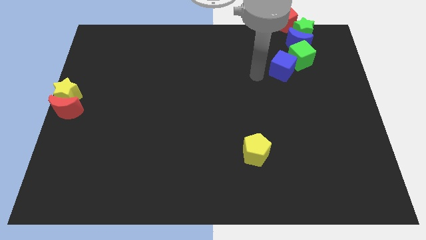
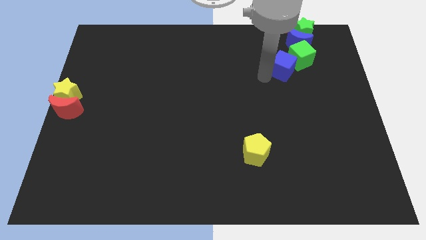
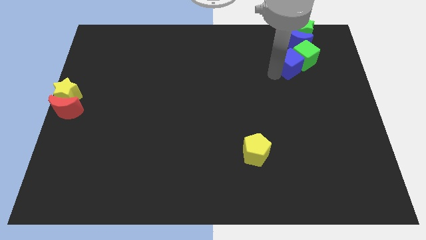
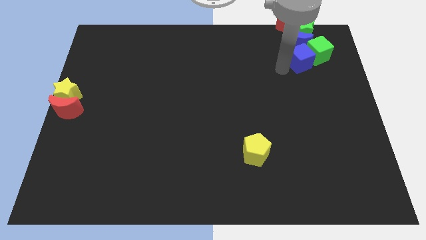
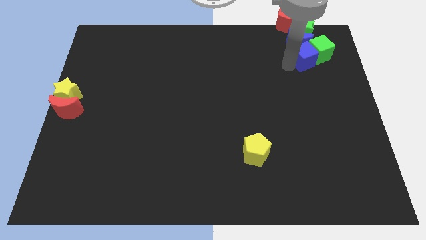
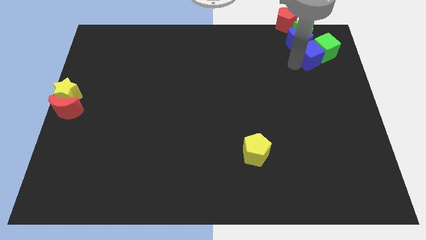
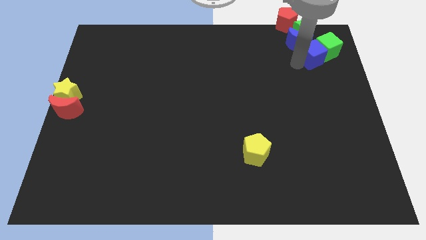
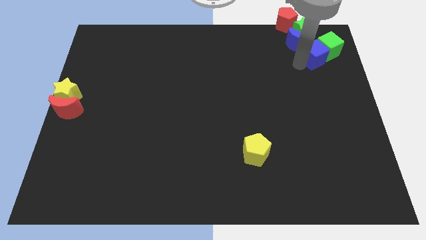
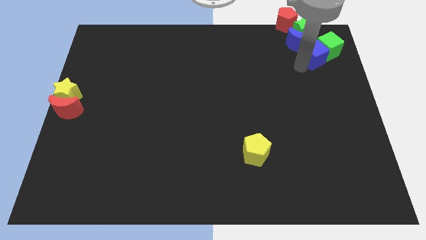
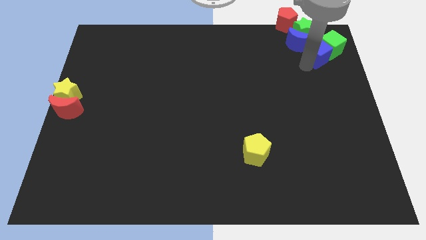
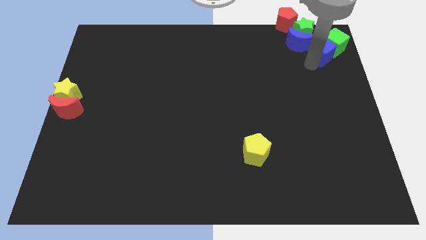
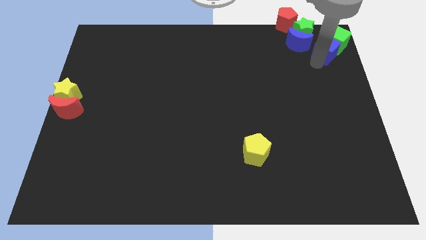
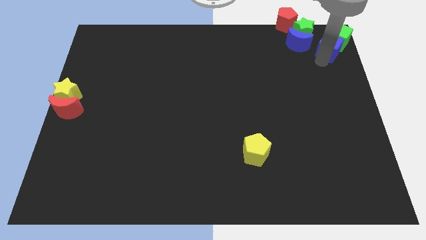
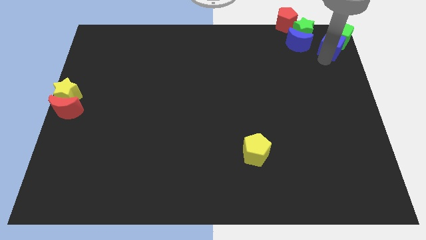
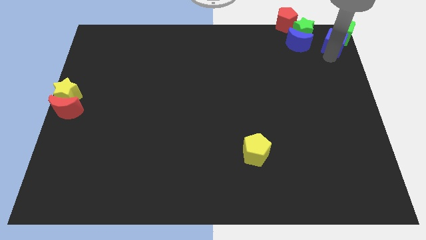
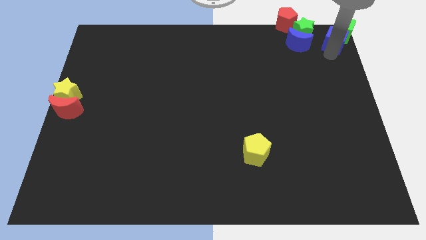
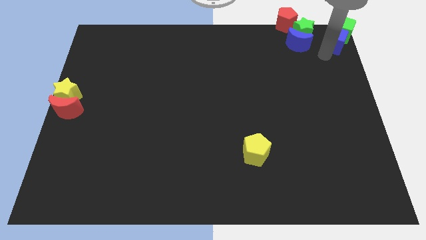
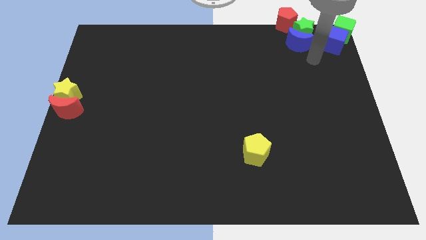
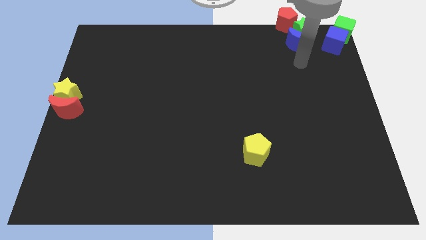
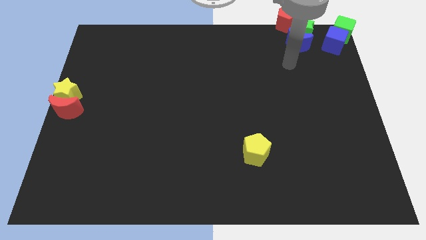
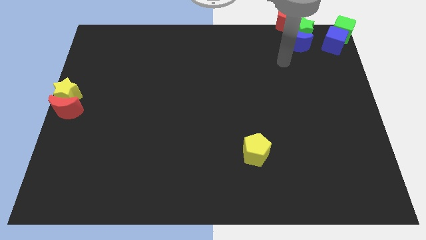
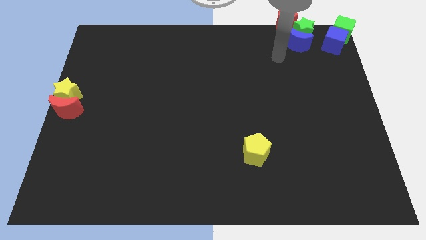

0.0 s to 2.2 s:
push the green cube with the blue cube to the top right of the board

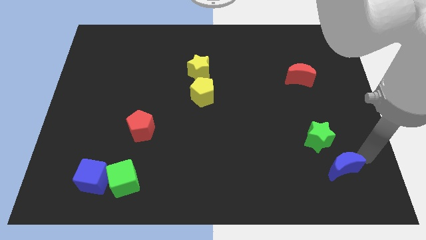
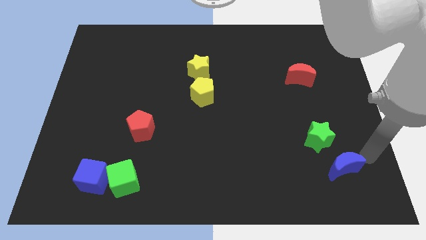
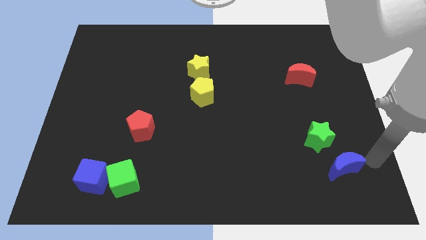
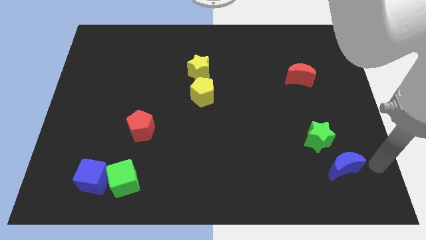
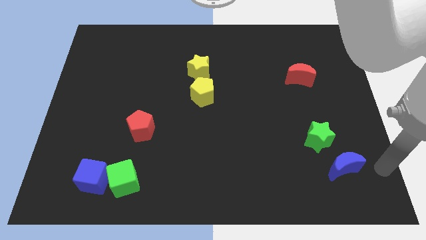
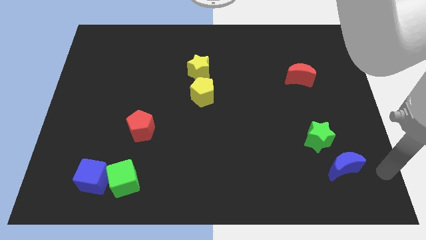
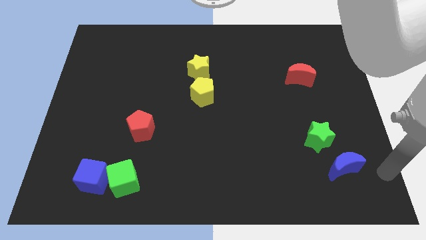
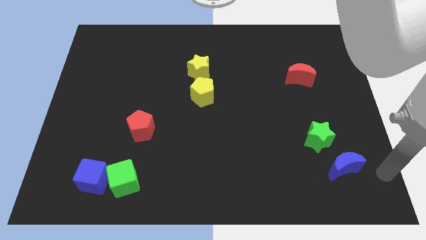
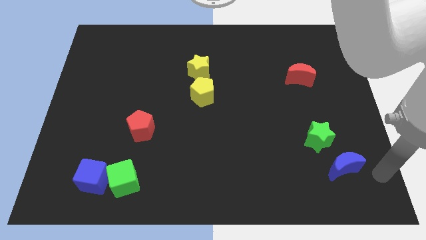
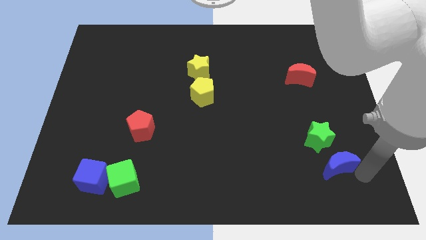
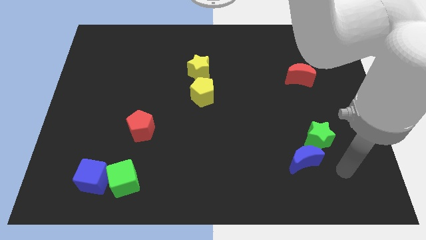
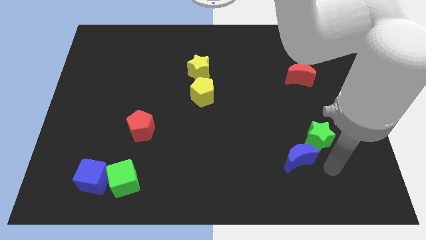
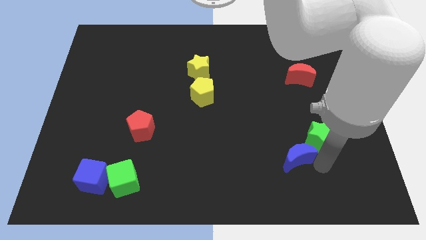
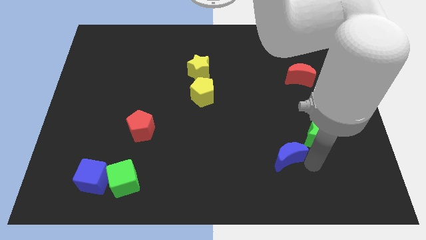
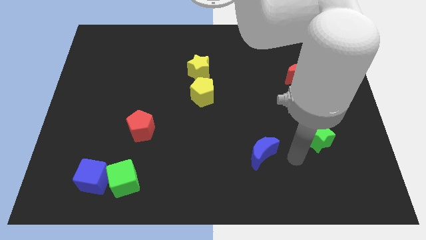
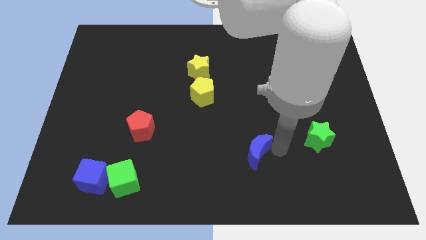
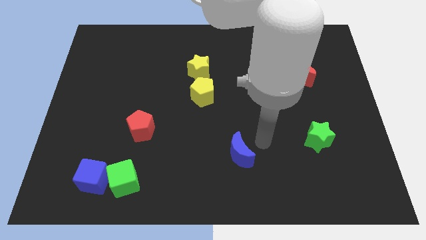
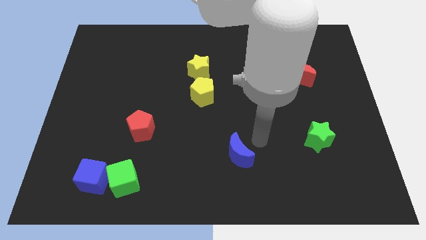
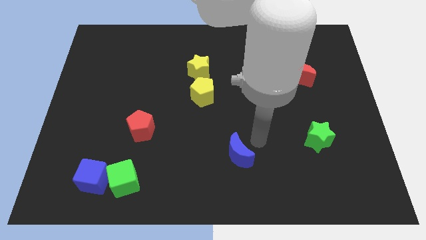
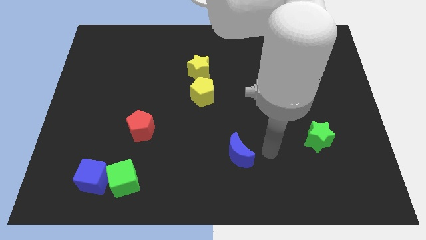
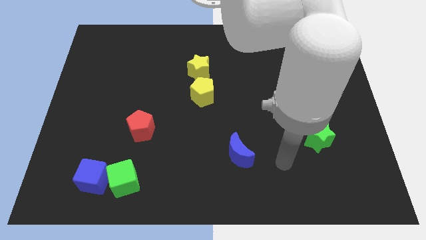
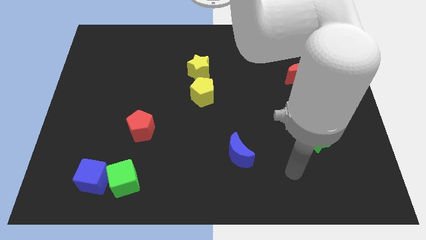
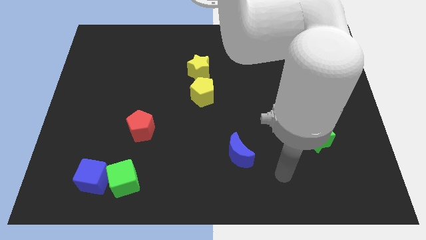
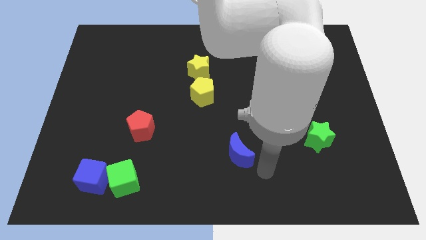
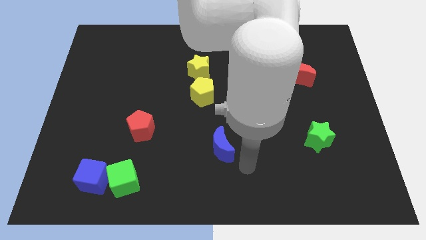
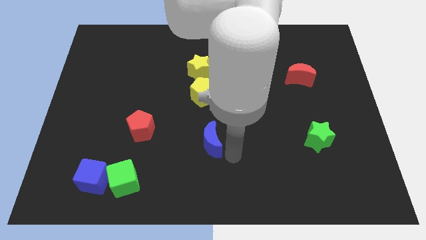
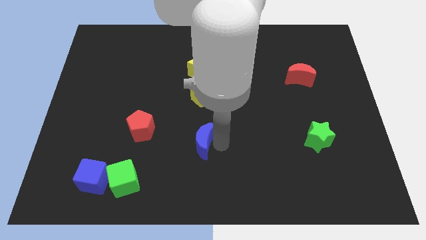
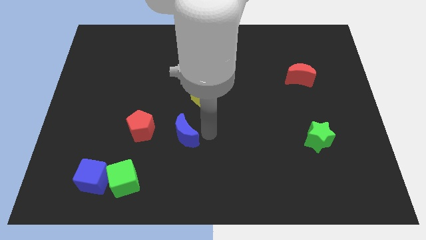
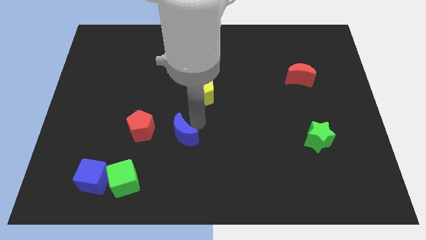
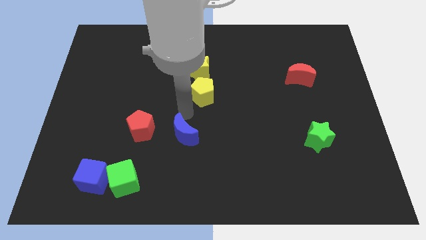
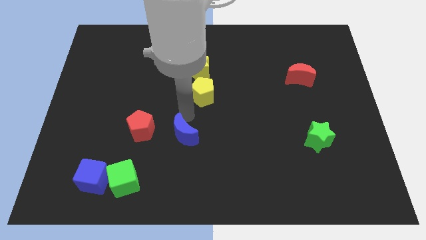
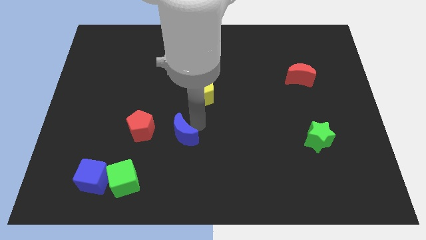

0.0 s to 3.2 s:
move the blue crescent to the right of the red pentagon

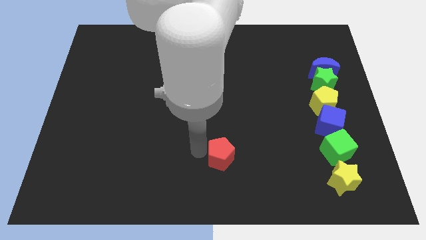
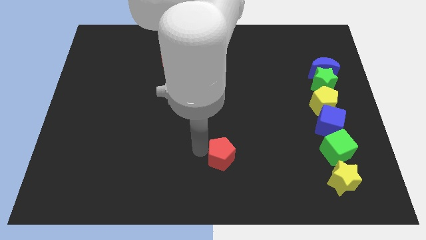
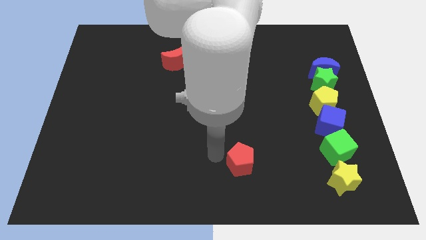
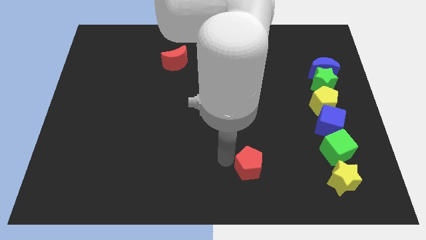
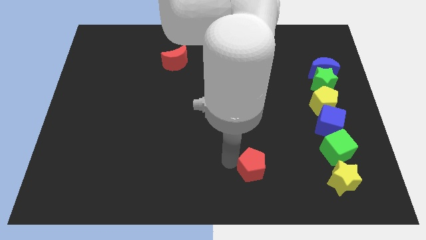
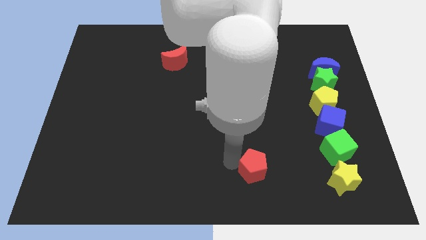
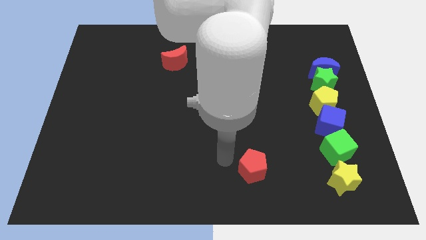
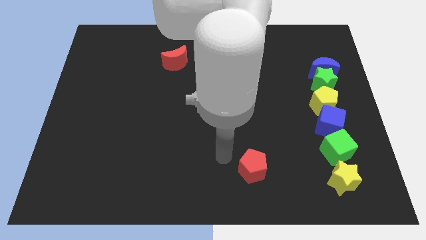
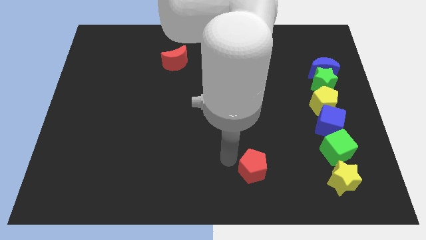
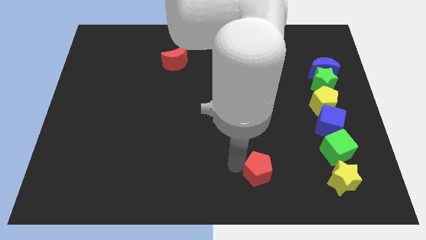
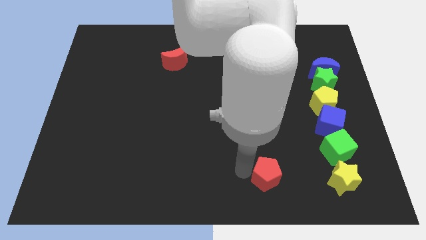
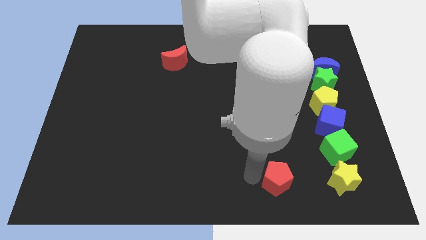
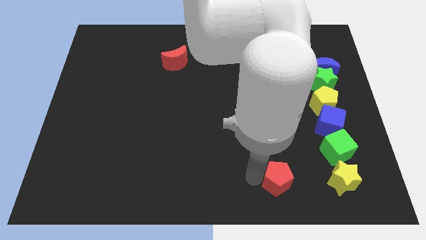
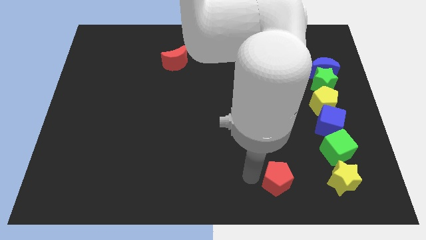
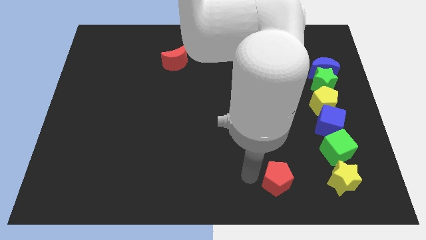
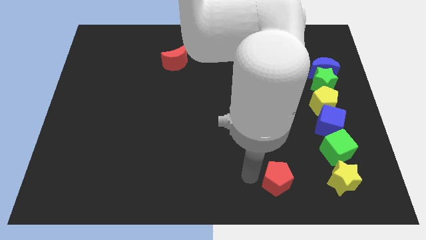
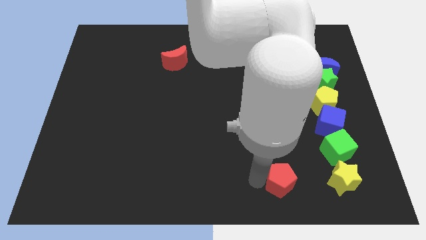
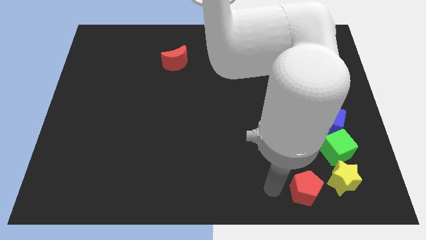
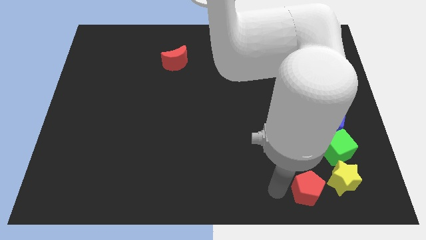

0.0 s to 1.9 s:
move the red pentagon horizontally to the yellow star

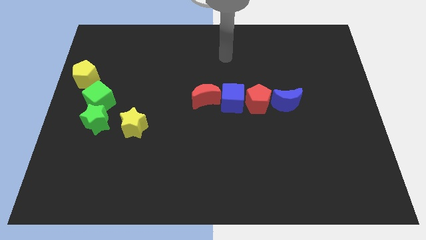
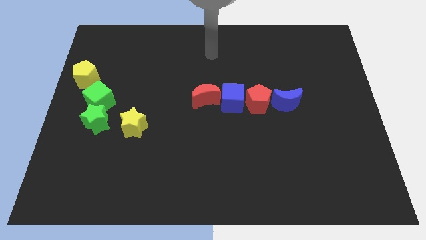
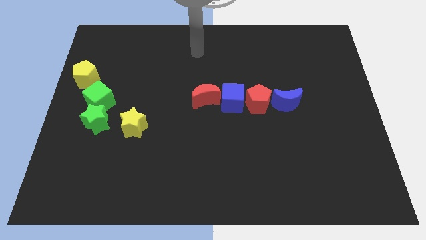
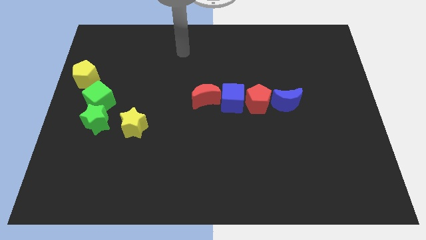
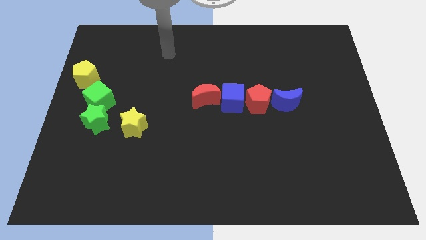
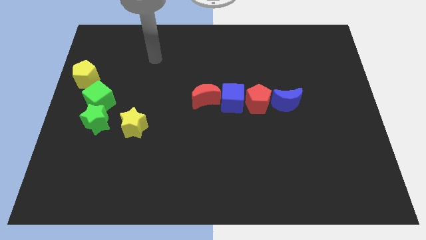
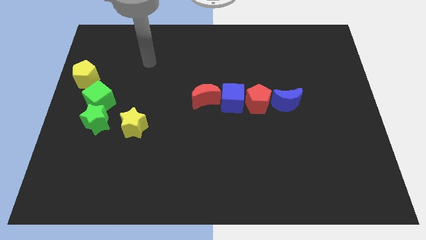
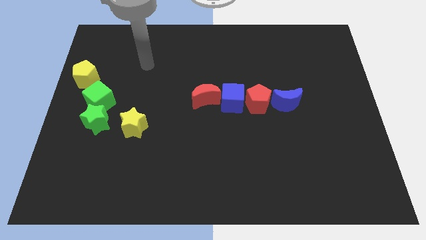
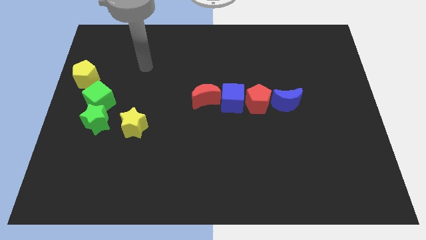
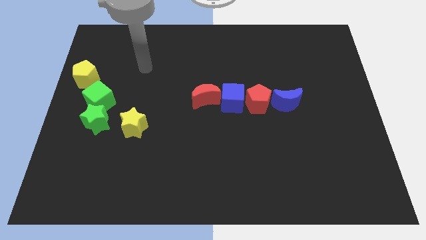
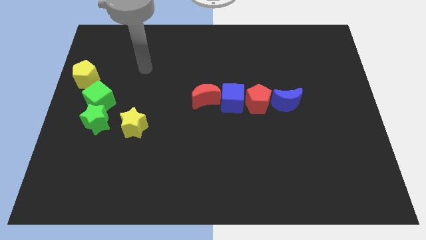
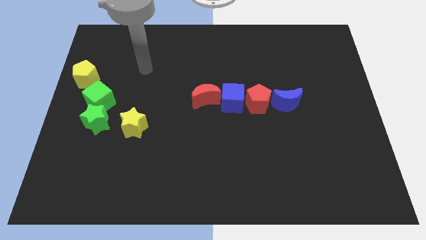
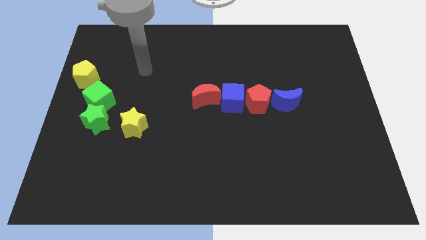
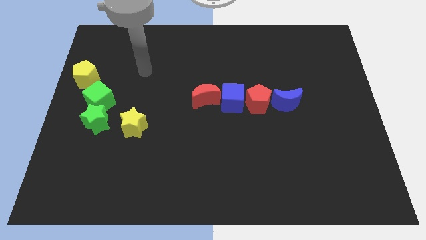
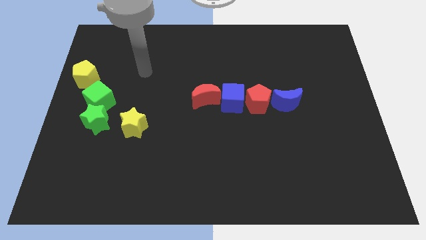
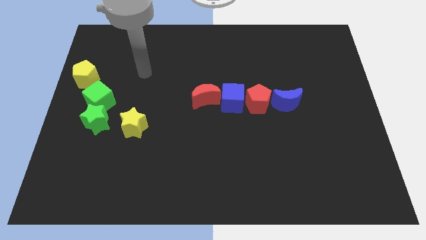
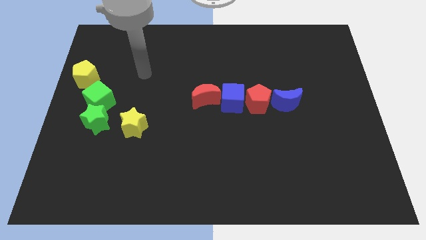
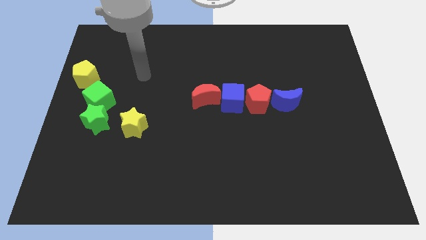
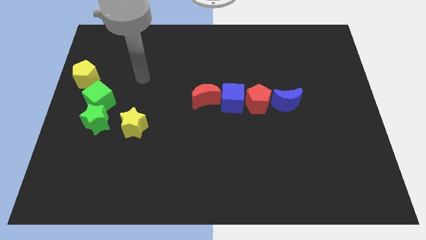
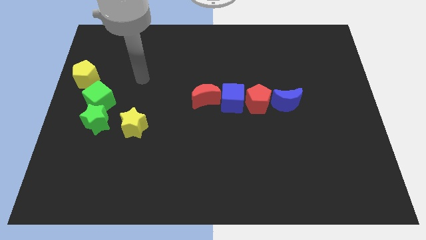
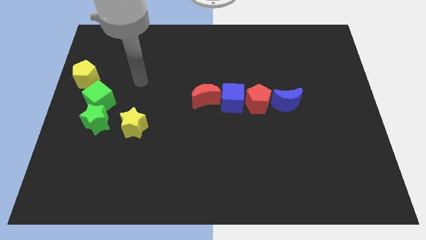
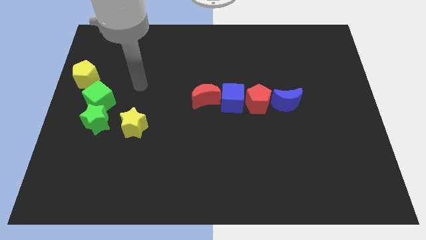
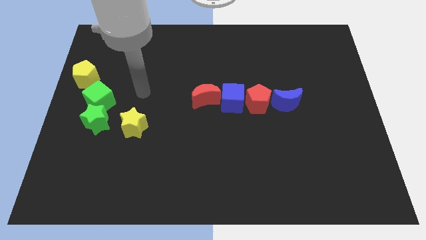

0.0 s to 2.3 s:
place your arm at the top of the yellow star
